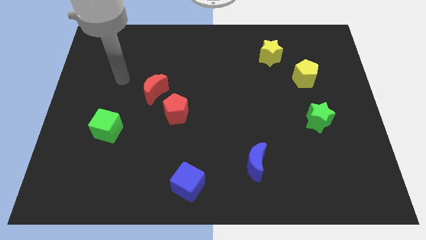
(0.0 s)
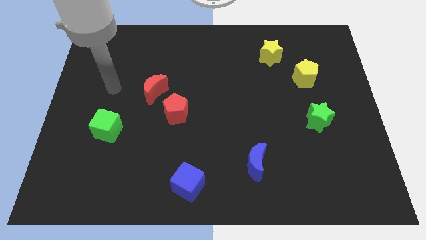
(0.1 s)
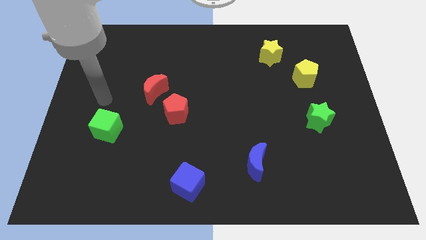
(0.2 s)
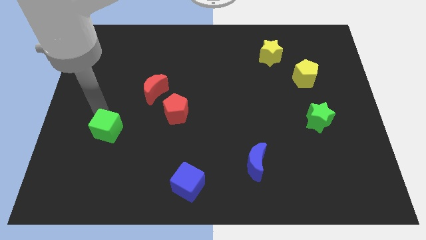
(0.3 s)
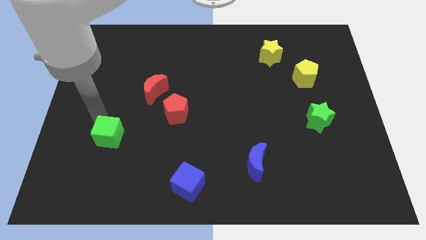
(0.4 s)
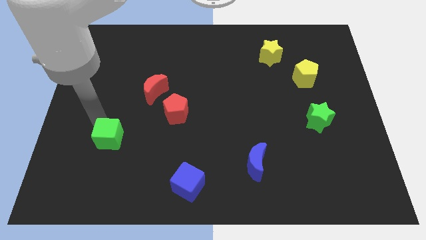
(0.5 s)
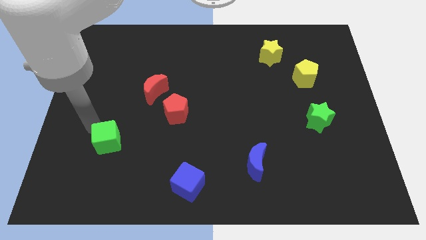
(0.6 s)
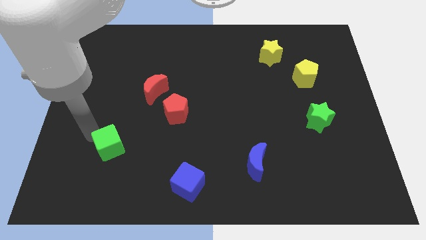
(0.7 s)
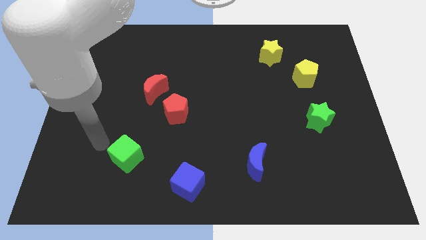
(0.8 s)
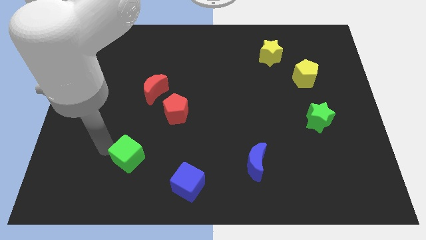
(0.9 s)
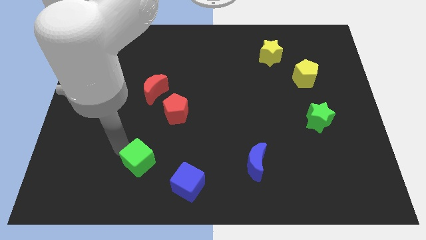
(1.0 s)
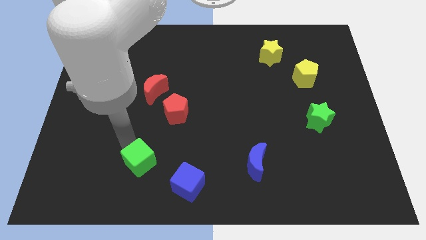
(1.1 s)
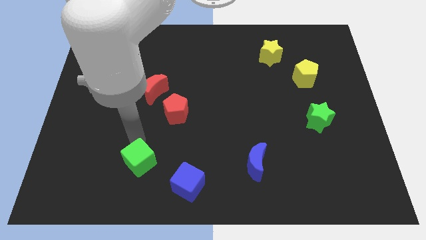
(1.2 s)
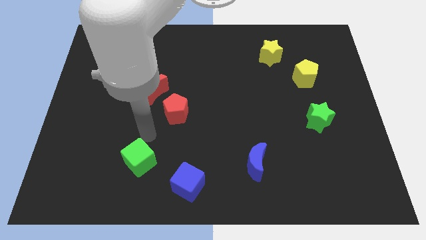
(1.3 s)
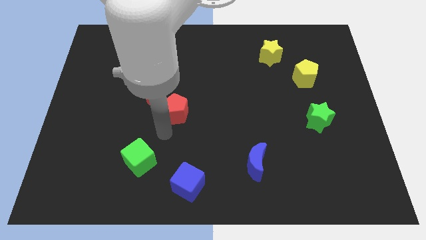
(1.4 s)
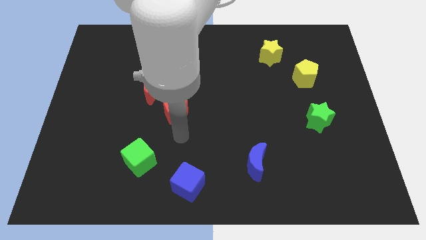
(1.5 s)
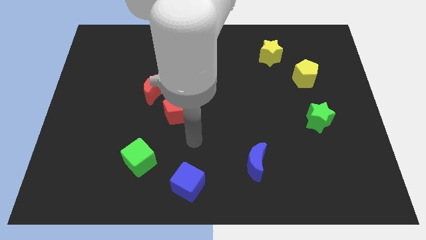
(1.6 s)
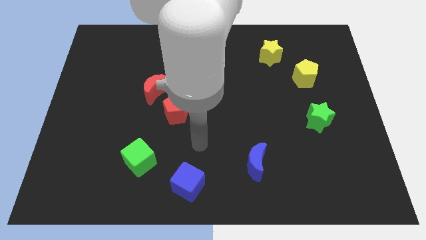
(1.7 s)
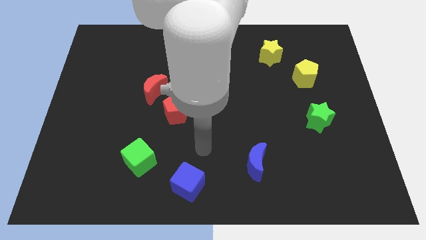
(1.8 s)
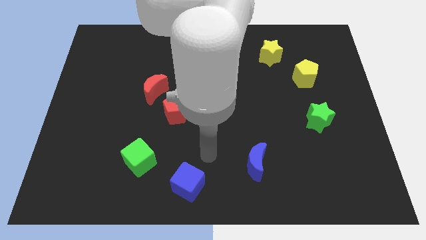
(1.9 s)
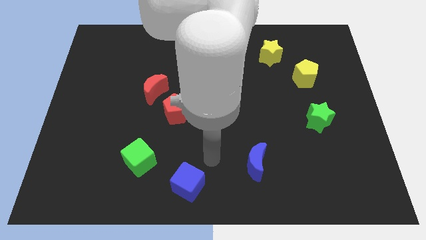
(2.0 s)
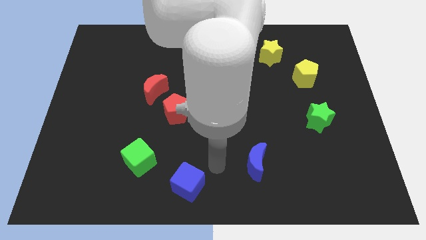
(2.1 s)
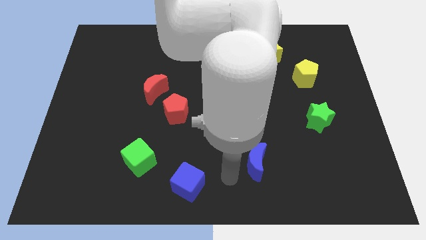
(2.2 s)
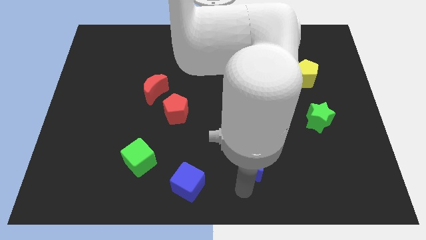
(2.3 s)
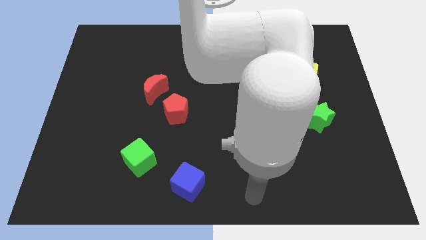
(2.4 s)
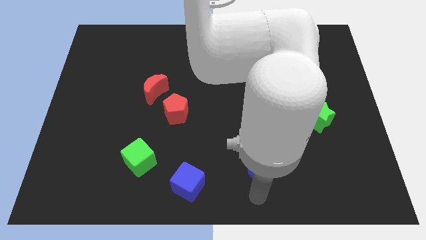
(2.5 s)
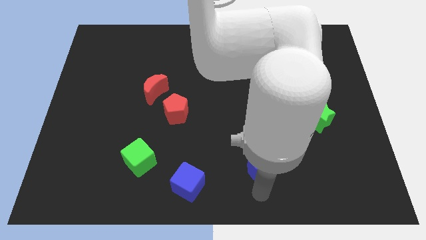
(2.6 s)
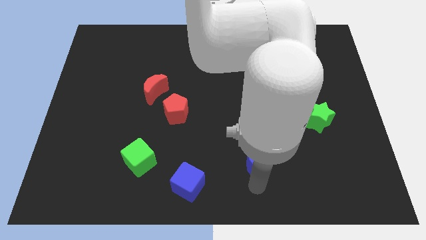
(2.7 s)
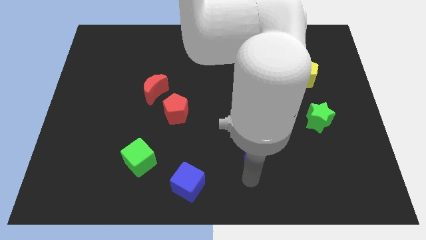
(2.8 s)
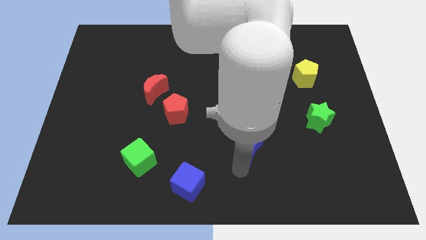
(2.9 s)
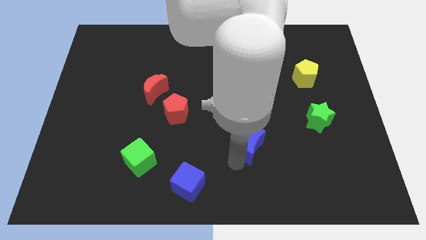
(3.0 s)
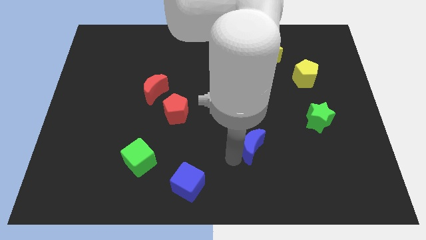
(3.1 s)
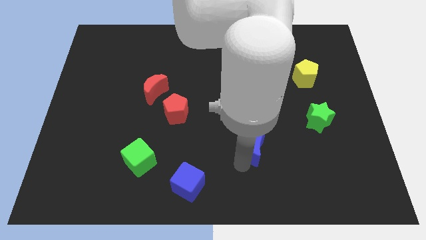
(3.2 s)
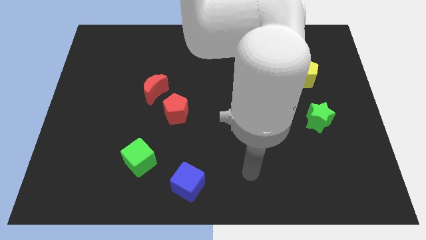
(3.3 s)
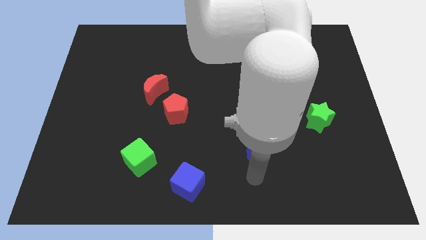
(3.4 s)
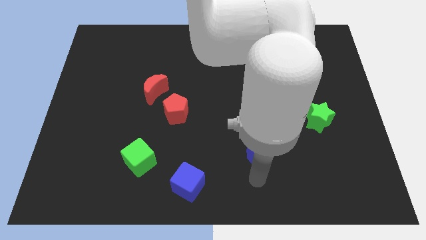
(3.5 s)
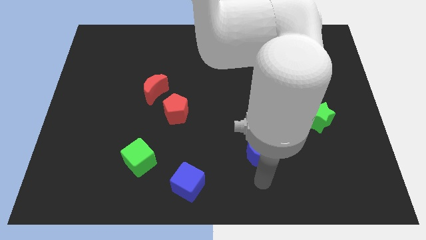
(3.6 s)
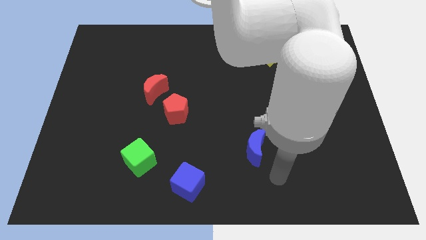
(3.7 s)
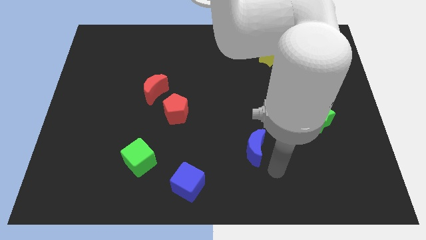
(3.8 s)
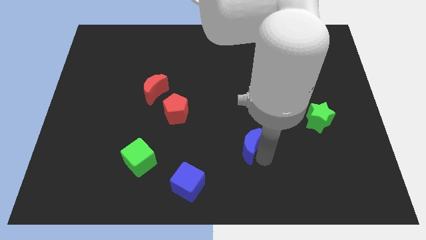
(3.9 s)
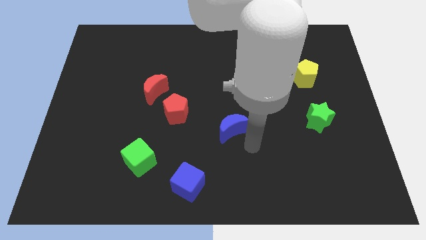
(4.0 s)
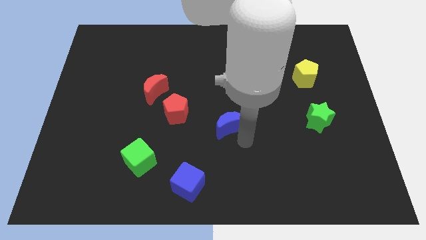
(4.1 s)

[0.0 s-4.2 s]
point your arm below blue moon

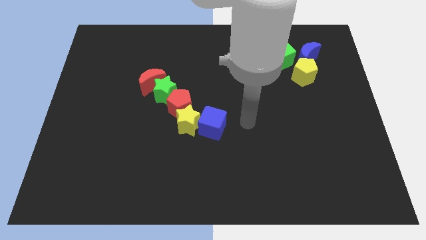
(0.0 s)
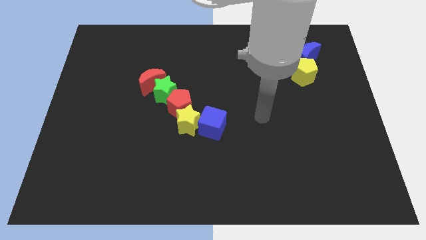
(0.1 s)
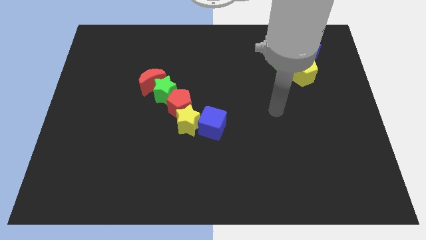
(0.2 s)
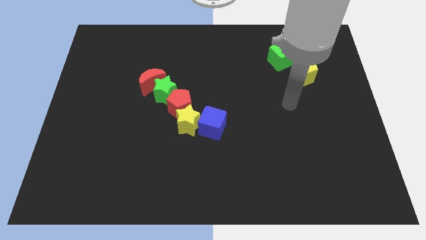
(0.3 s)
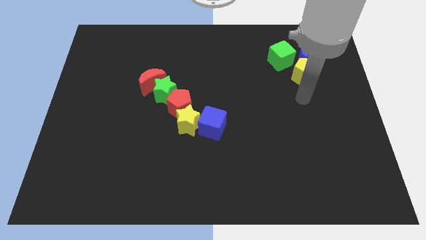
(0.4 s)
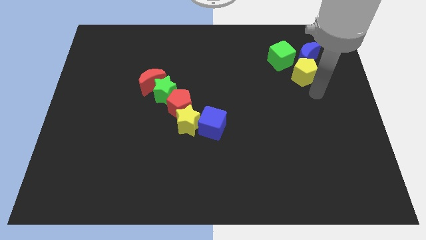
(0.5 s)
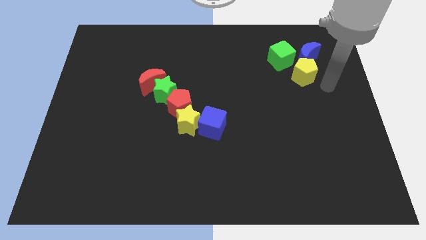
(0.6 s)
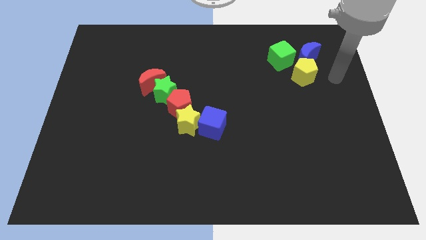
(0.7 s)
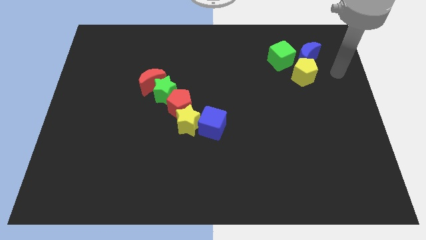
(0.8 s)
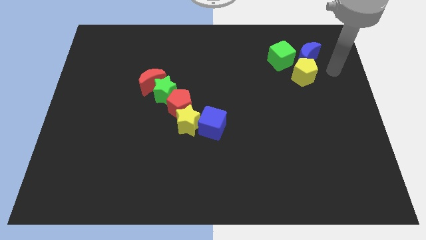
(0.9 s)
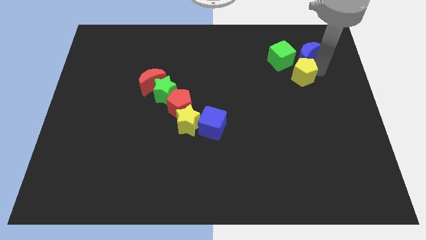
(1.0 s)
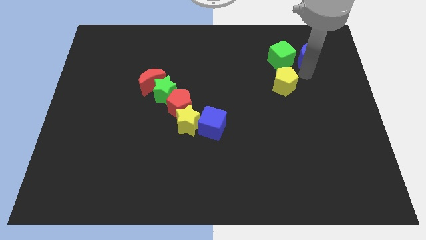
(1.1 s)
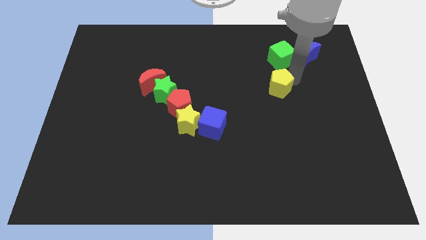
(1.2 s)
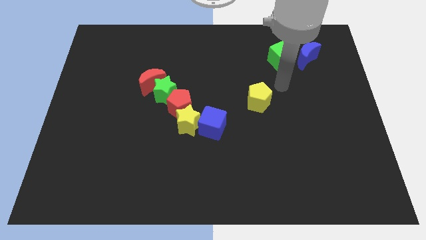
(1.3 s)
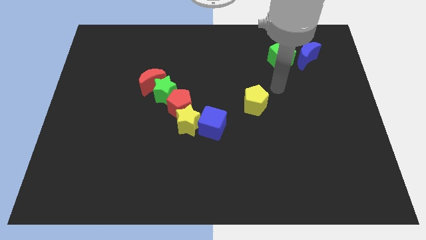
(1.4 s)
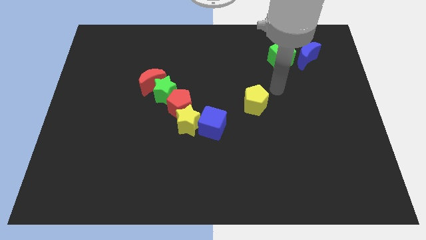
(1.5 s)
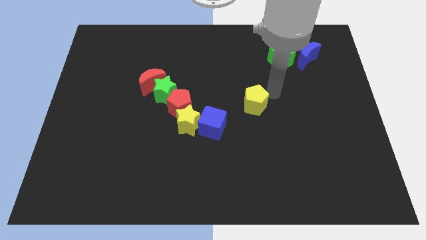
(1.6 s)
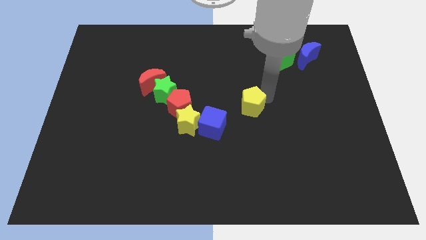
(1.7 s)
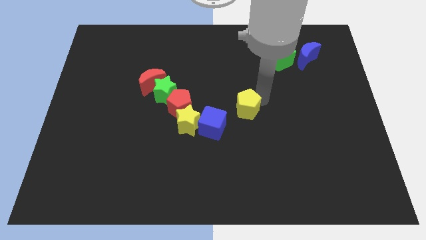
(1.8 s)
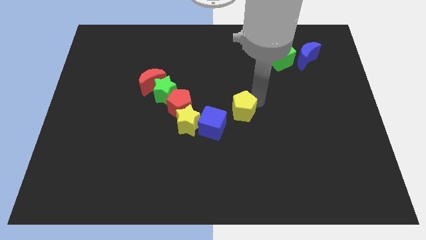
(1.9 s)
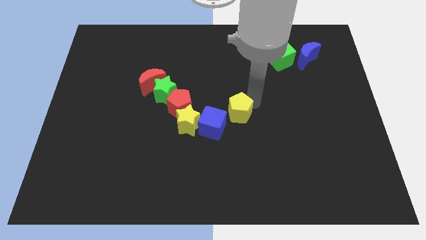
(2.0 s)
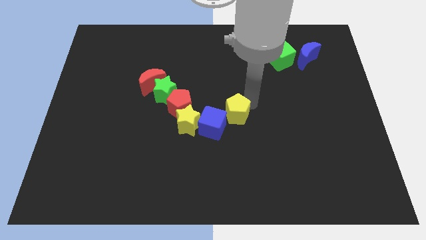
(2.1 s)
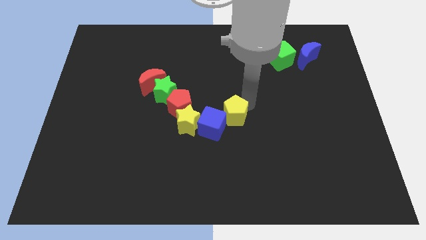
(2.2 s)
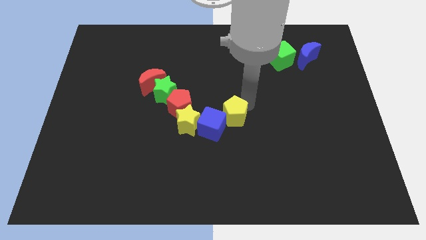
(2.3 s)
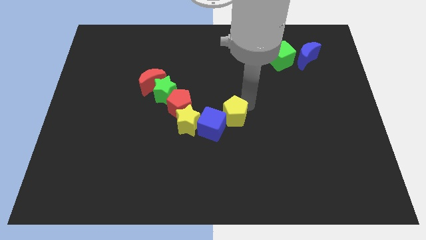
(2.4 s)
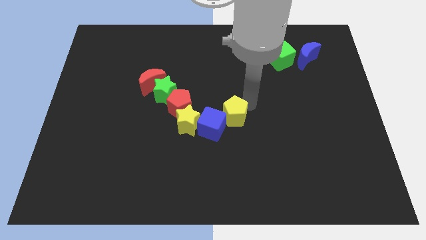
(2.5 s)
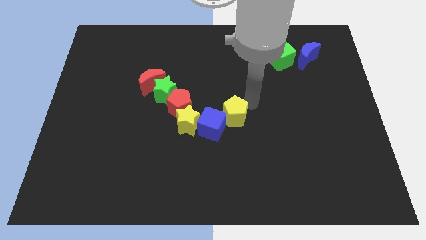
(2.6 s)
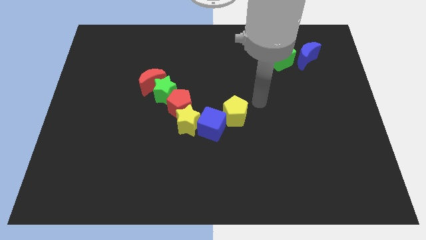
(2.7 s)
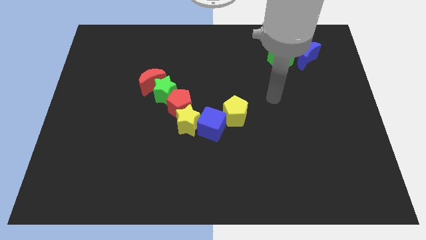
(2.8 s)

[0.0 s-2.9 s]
move the yellow pentagon to the center of the board

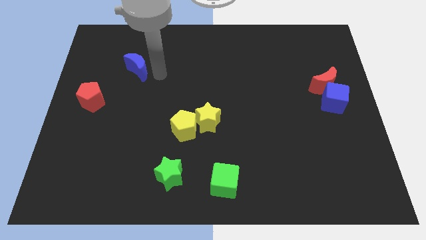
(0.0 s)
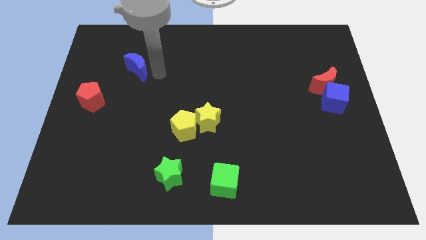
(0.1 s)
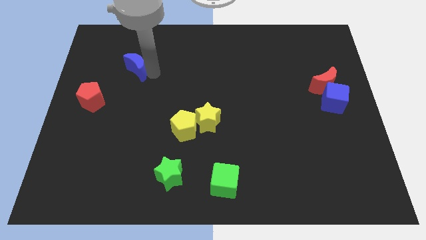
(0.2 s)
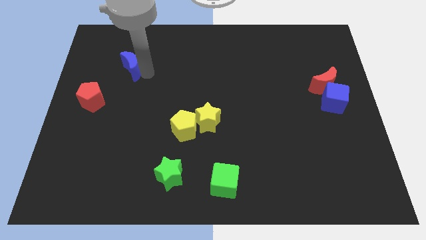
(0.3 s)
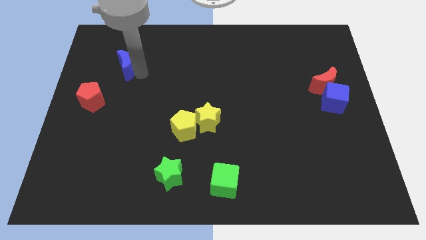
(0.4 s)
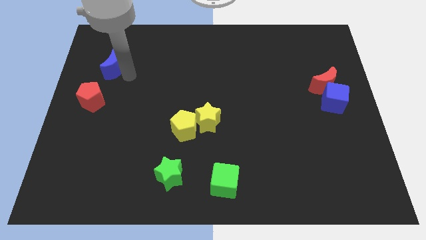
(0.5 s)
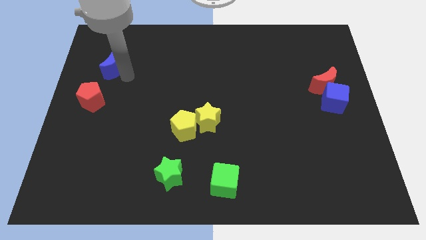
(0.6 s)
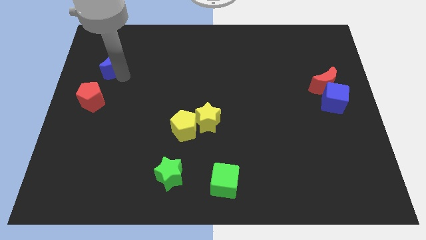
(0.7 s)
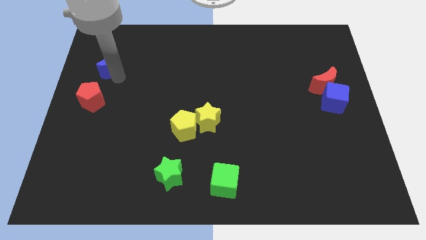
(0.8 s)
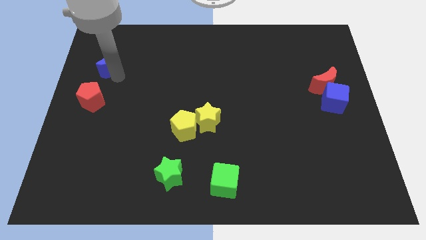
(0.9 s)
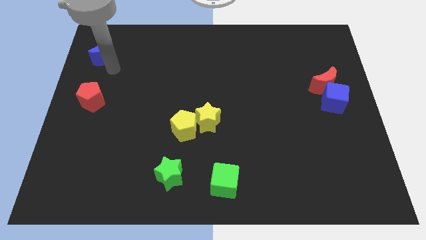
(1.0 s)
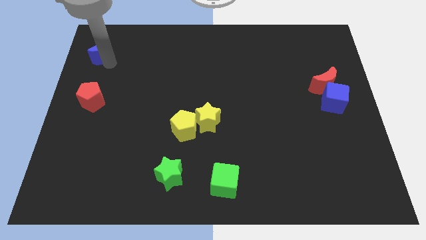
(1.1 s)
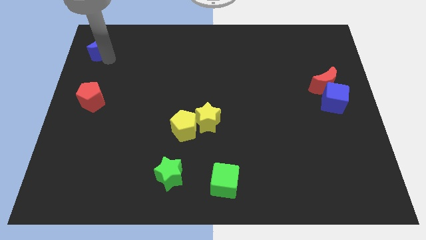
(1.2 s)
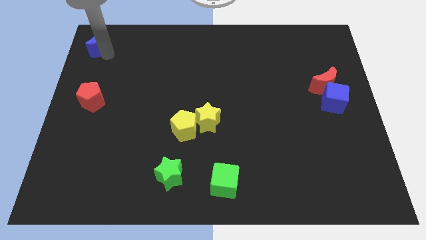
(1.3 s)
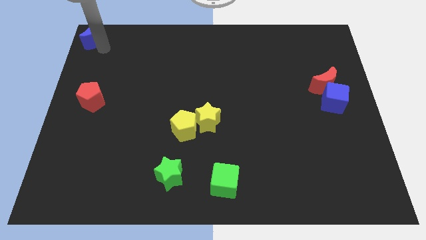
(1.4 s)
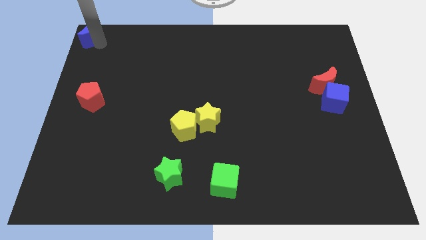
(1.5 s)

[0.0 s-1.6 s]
place the blue moon above the red pentagon
